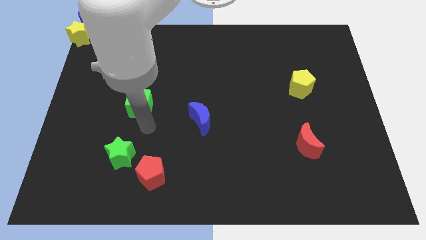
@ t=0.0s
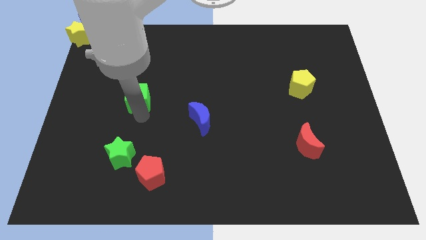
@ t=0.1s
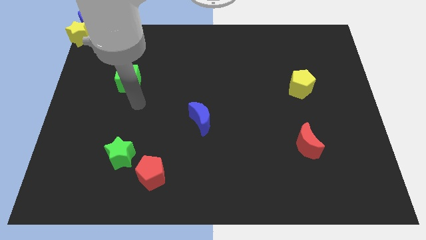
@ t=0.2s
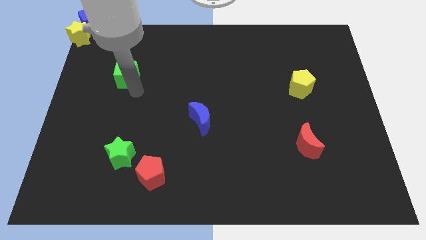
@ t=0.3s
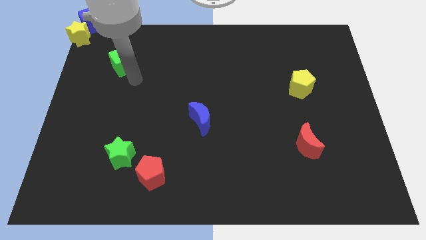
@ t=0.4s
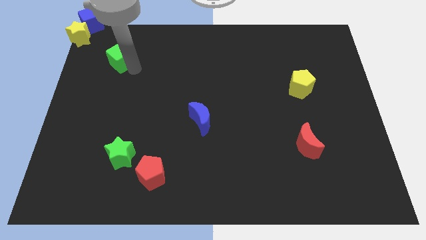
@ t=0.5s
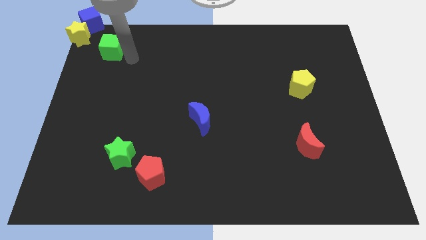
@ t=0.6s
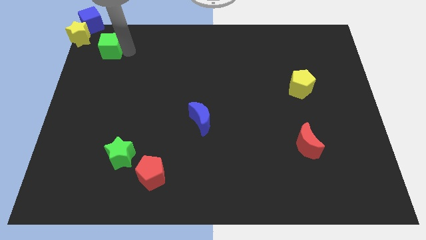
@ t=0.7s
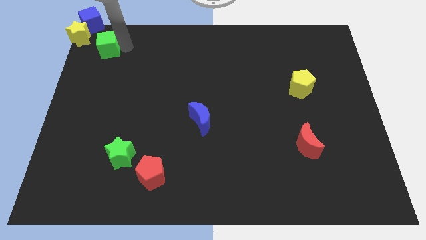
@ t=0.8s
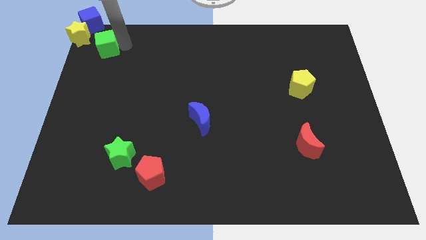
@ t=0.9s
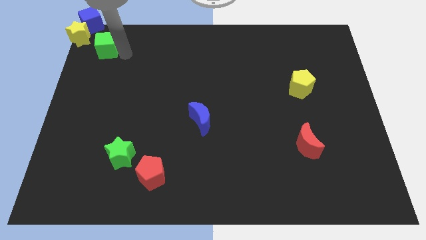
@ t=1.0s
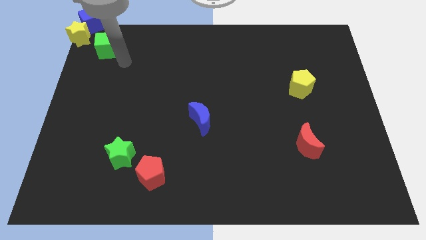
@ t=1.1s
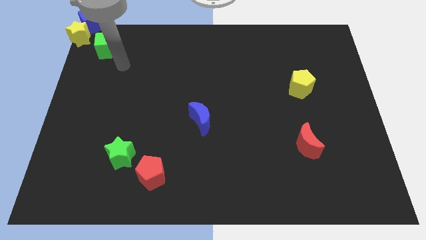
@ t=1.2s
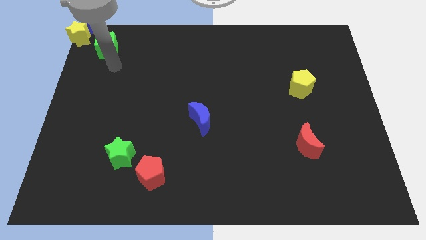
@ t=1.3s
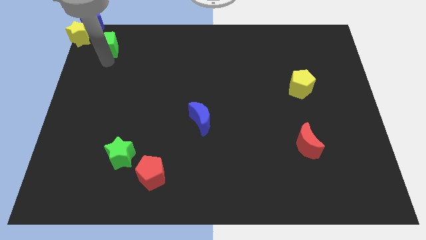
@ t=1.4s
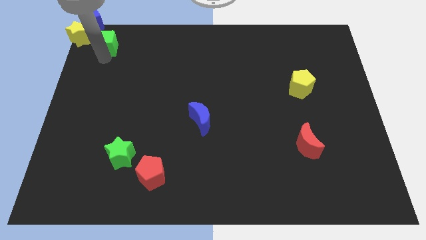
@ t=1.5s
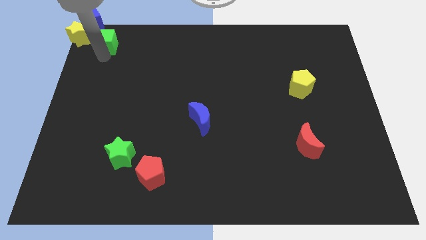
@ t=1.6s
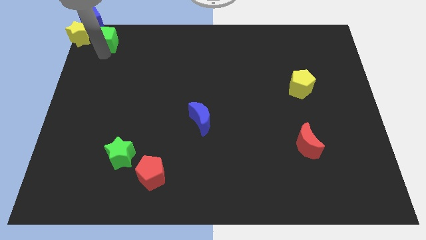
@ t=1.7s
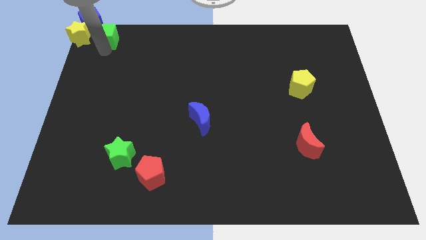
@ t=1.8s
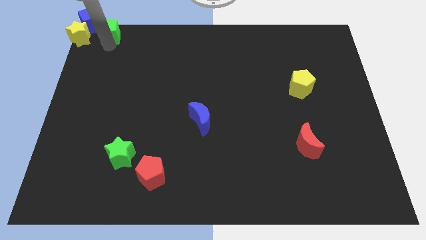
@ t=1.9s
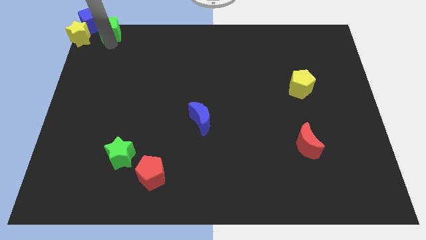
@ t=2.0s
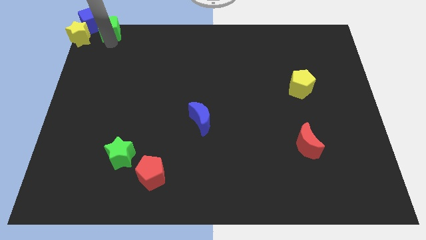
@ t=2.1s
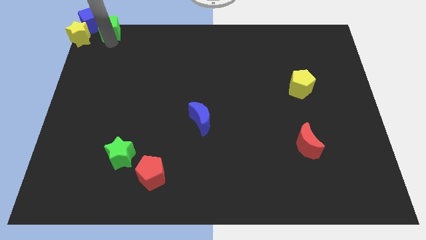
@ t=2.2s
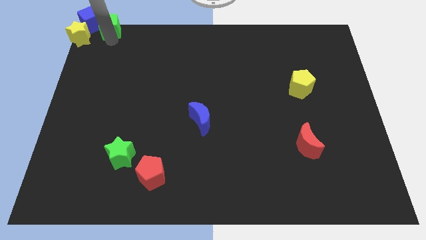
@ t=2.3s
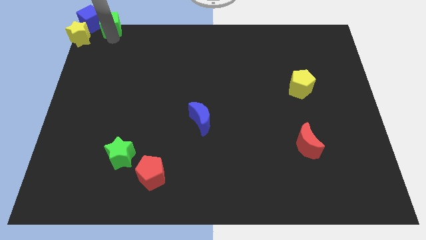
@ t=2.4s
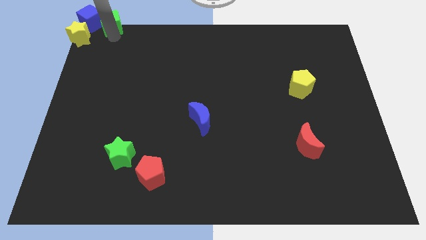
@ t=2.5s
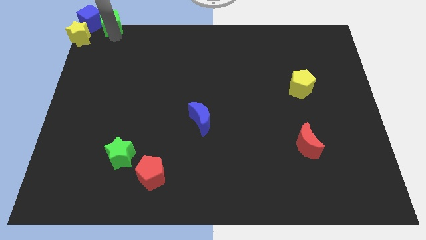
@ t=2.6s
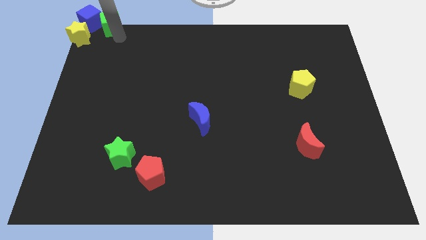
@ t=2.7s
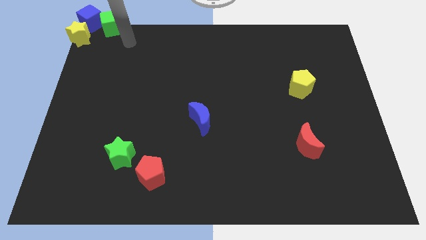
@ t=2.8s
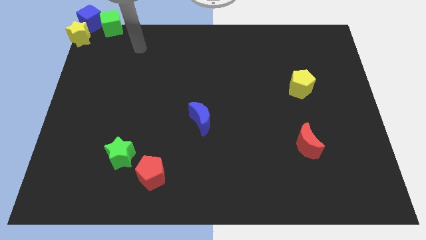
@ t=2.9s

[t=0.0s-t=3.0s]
move the green cube diagonal right into blue cube

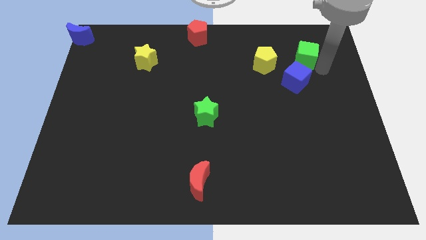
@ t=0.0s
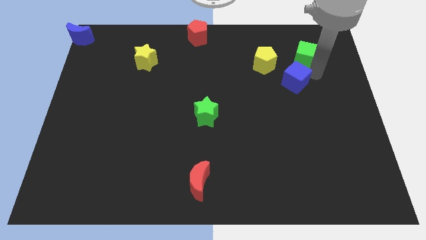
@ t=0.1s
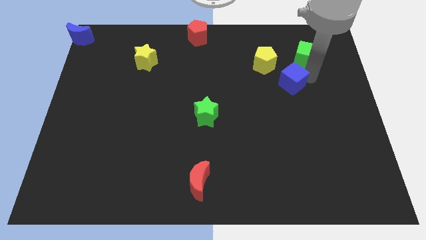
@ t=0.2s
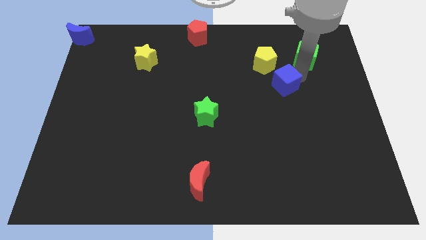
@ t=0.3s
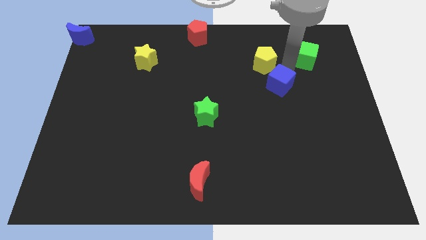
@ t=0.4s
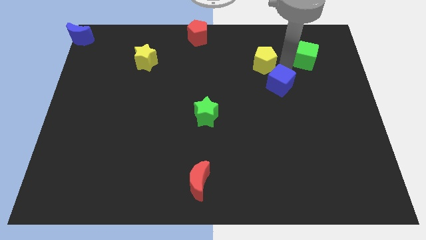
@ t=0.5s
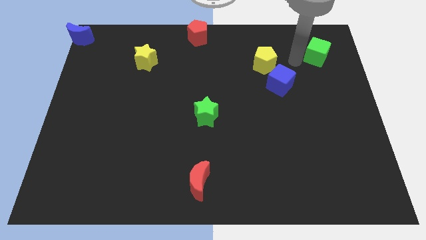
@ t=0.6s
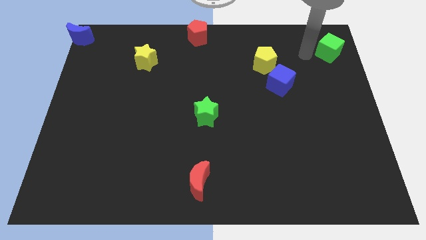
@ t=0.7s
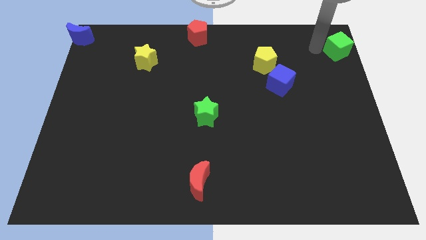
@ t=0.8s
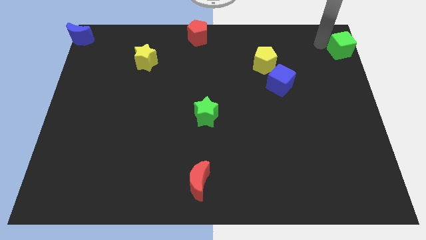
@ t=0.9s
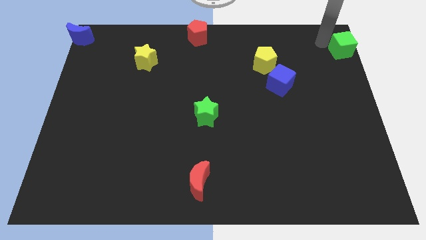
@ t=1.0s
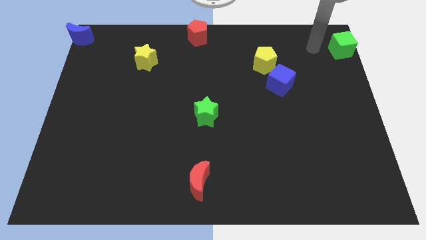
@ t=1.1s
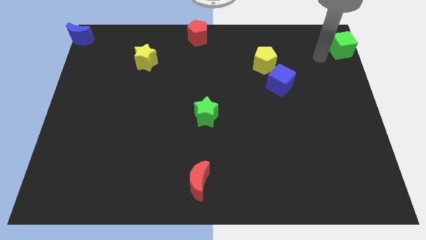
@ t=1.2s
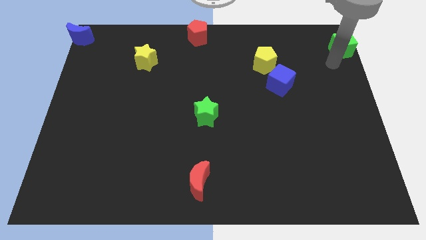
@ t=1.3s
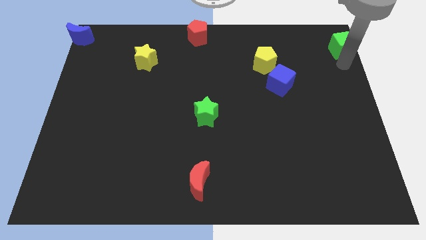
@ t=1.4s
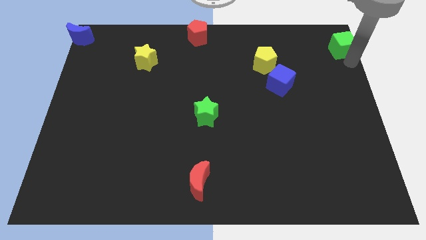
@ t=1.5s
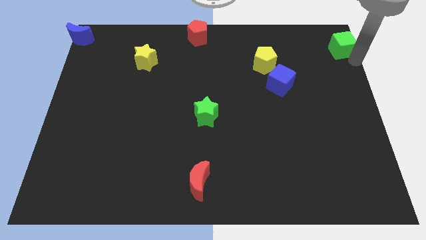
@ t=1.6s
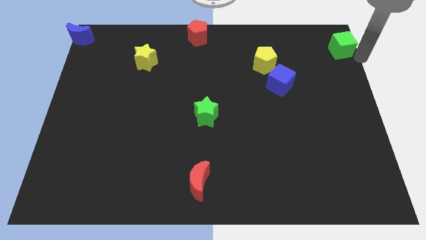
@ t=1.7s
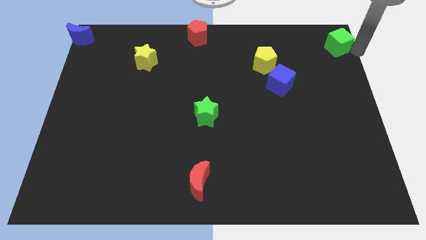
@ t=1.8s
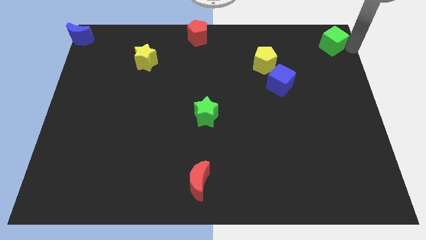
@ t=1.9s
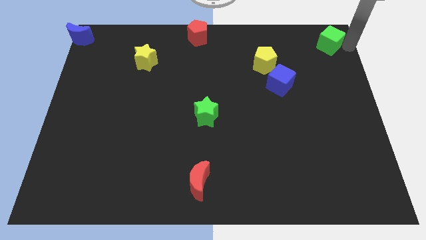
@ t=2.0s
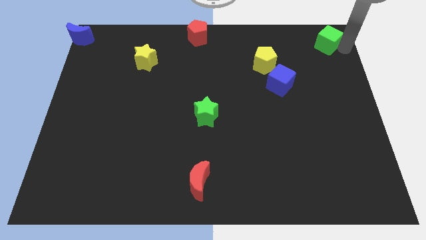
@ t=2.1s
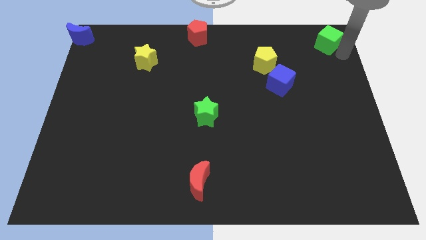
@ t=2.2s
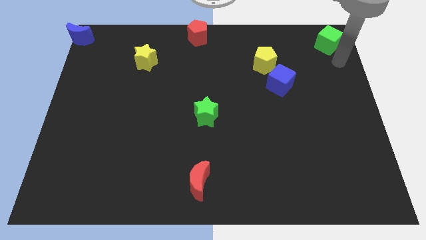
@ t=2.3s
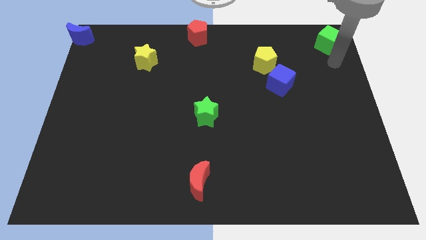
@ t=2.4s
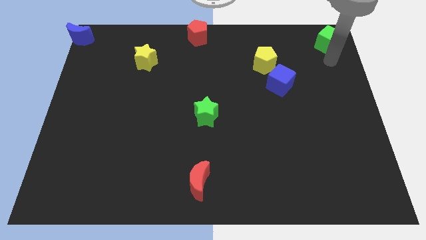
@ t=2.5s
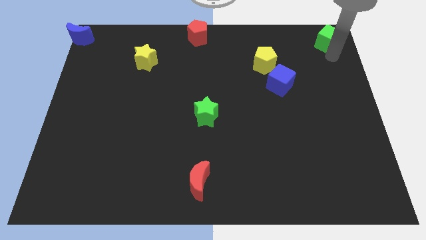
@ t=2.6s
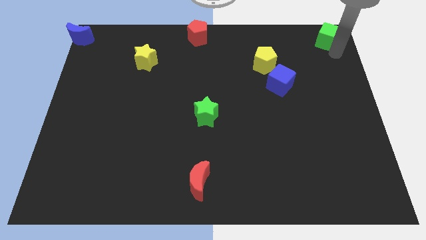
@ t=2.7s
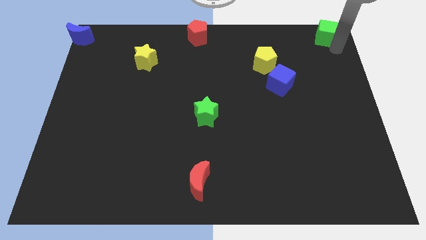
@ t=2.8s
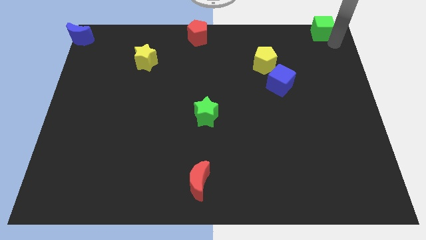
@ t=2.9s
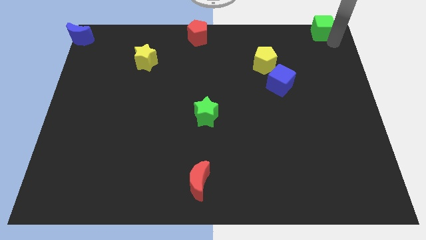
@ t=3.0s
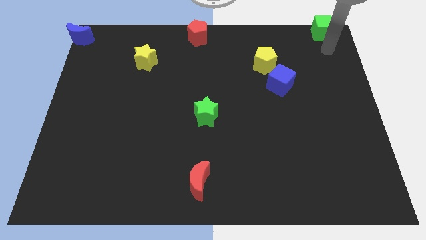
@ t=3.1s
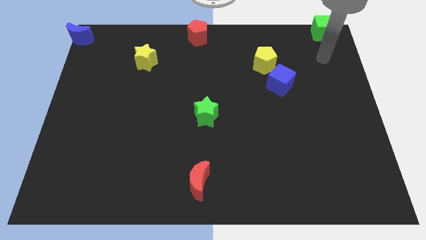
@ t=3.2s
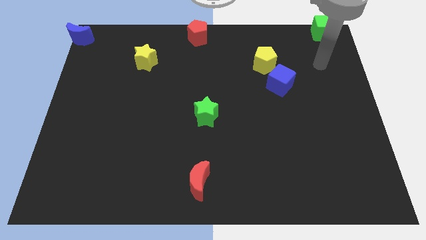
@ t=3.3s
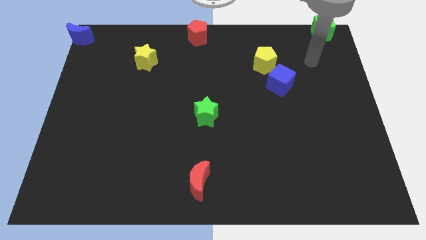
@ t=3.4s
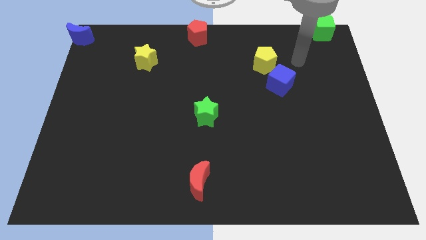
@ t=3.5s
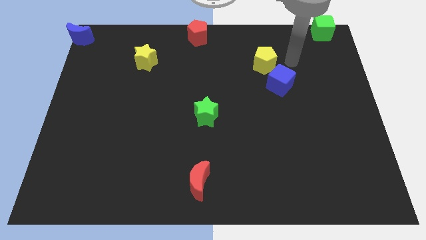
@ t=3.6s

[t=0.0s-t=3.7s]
place the green cube on the top right of the board

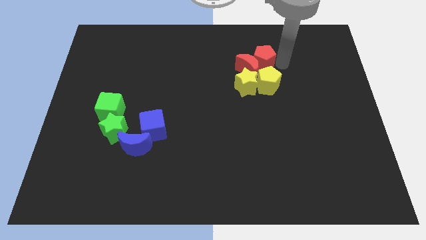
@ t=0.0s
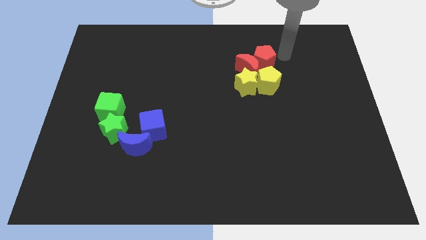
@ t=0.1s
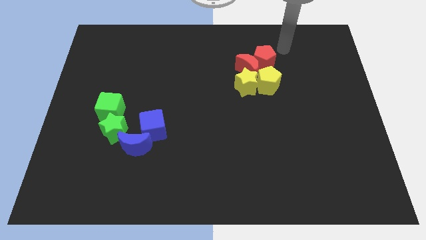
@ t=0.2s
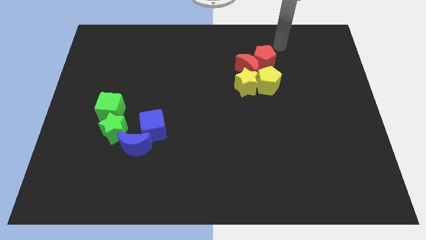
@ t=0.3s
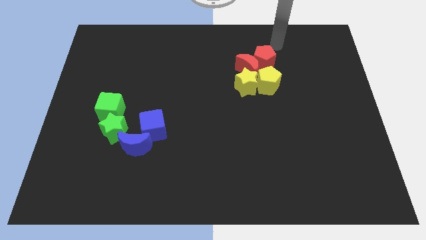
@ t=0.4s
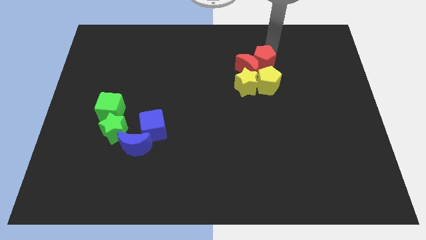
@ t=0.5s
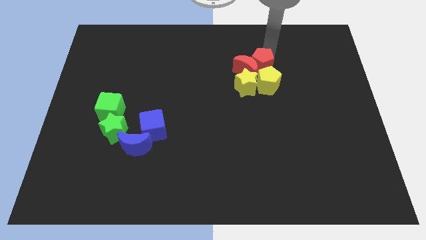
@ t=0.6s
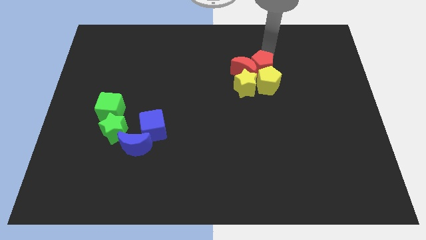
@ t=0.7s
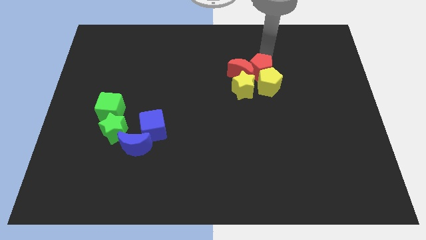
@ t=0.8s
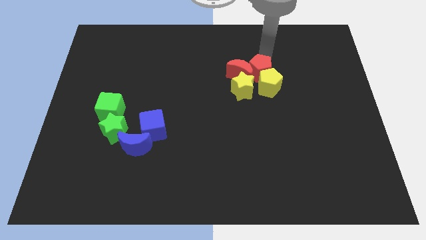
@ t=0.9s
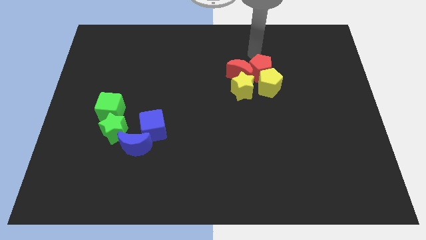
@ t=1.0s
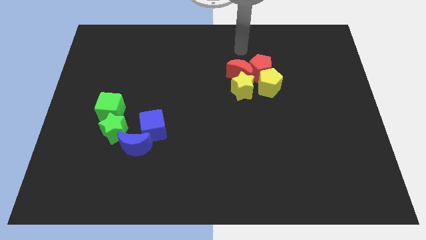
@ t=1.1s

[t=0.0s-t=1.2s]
move the red pentagon into the yellow pentagon

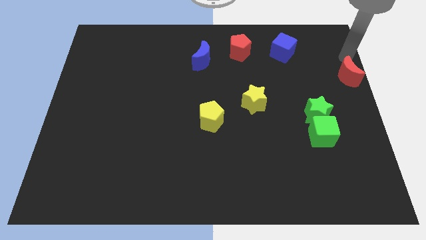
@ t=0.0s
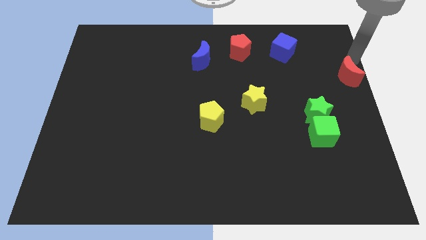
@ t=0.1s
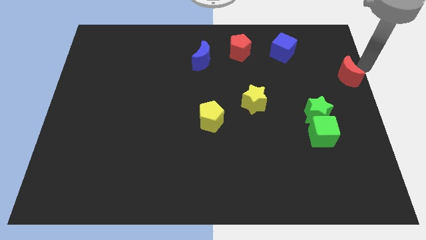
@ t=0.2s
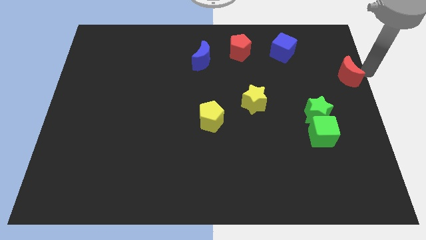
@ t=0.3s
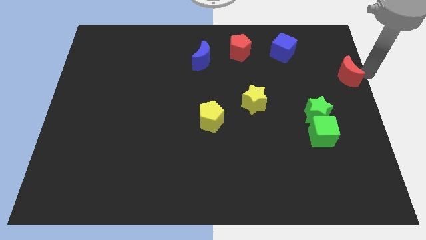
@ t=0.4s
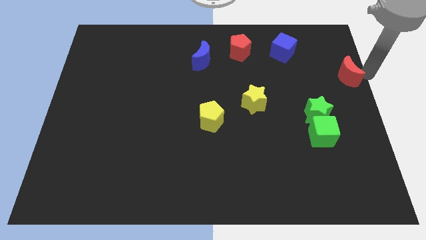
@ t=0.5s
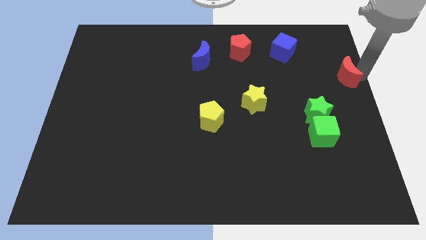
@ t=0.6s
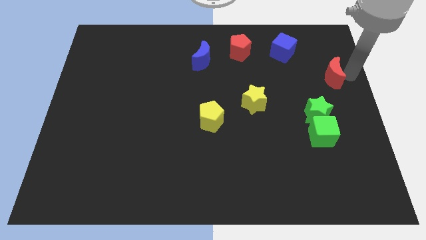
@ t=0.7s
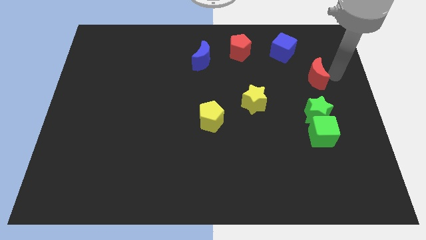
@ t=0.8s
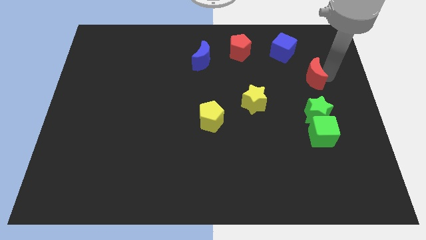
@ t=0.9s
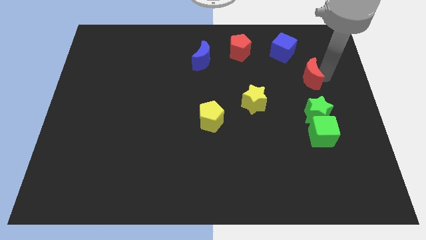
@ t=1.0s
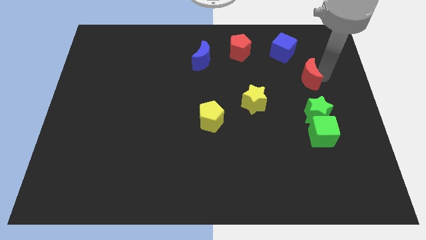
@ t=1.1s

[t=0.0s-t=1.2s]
push the red moon to the top of the green star

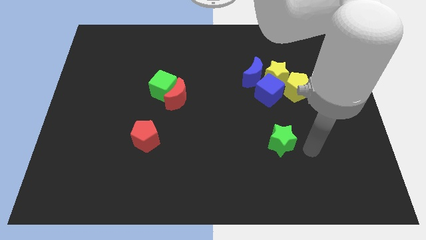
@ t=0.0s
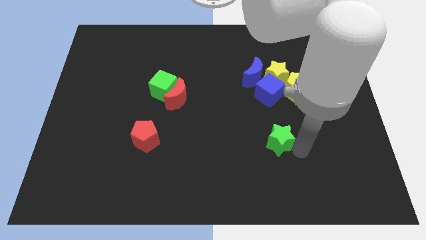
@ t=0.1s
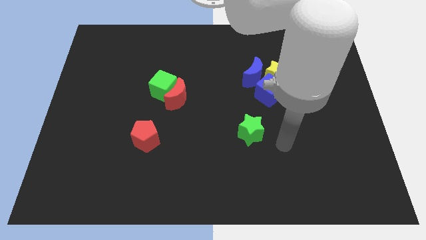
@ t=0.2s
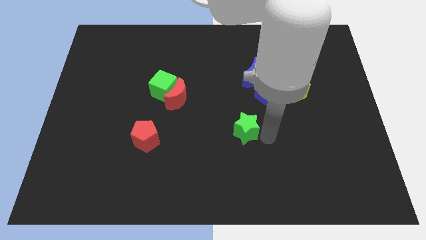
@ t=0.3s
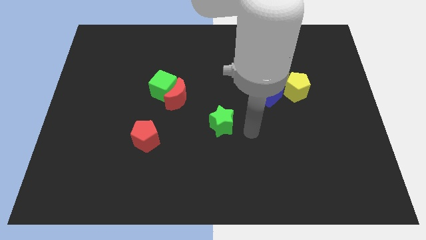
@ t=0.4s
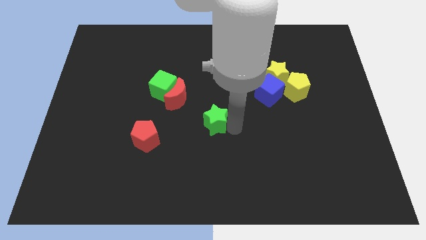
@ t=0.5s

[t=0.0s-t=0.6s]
push the green star to the center of the board
